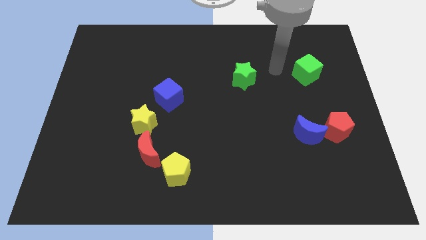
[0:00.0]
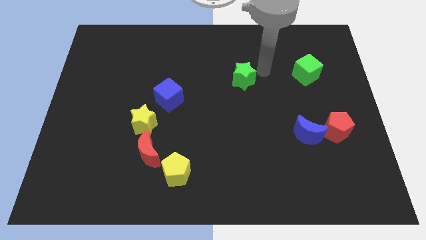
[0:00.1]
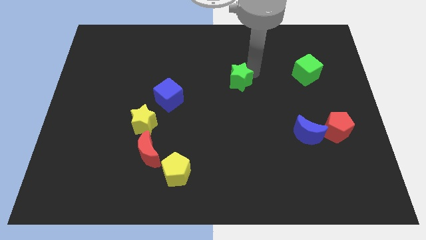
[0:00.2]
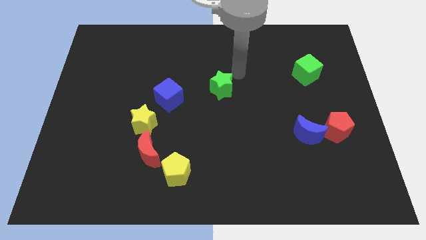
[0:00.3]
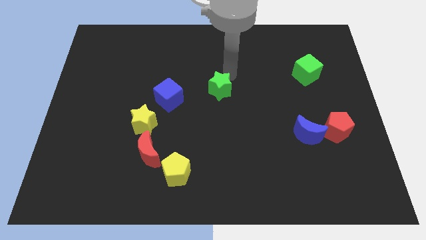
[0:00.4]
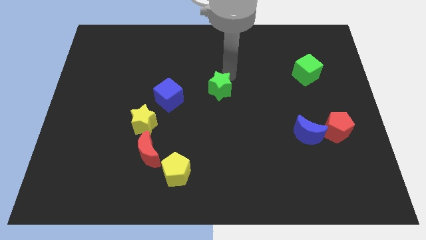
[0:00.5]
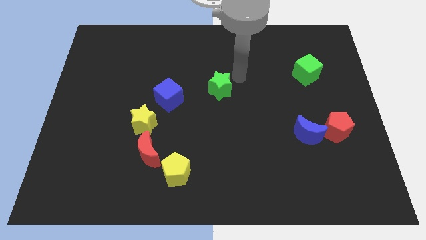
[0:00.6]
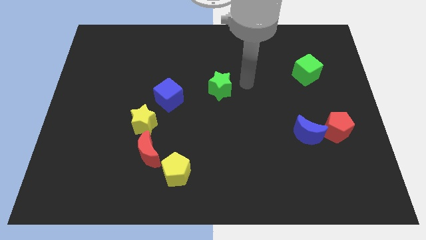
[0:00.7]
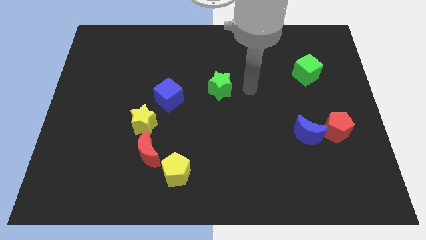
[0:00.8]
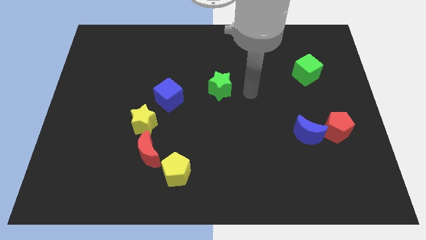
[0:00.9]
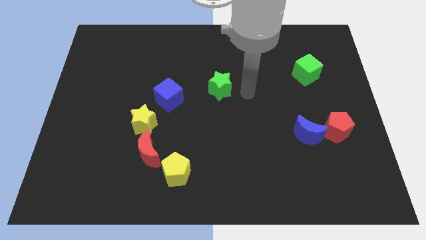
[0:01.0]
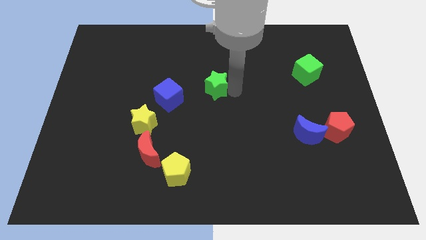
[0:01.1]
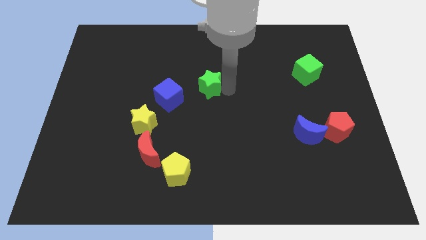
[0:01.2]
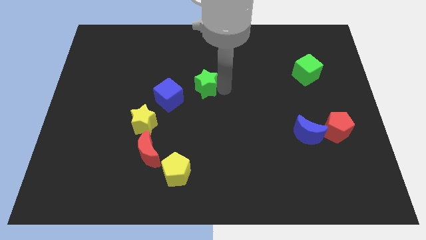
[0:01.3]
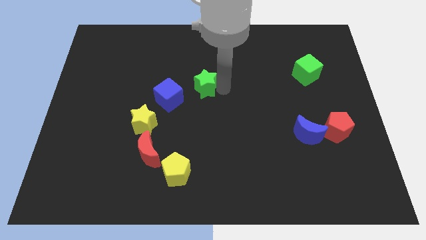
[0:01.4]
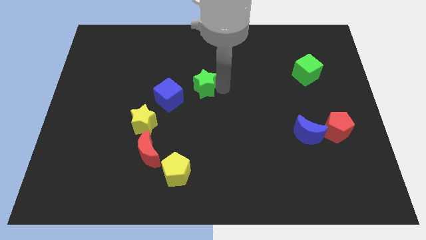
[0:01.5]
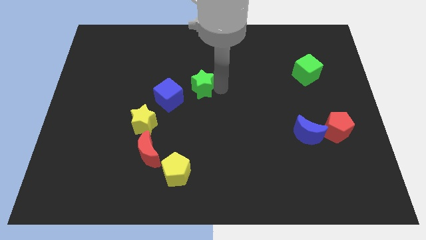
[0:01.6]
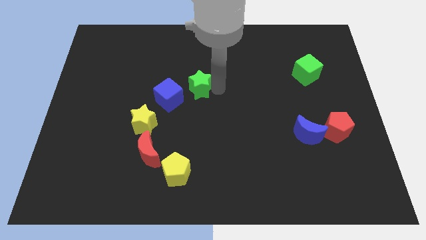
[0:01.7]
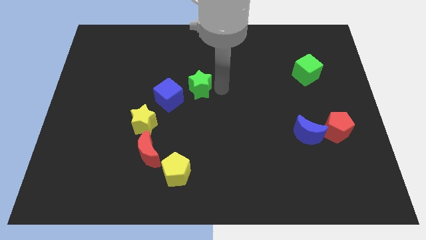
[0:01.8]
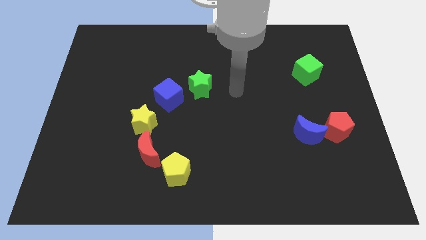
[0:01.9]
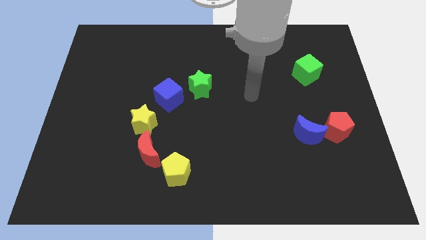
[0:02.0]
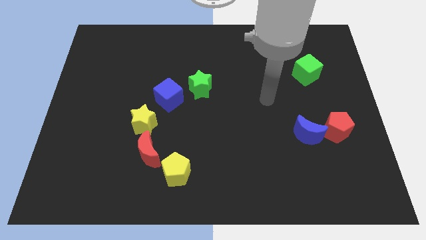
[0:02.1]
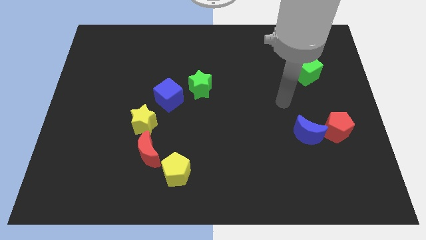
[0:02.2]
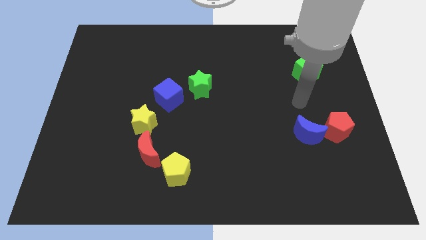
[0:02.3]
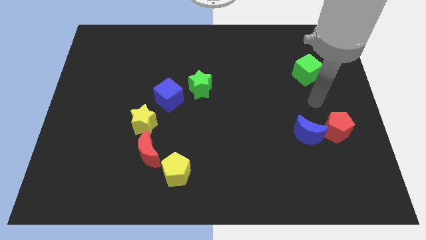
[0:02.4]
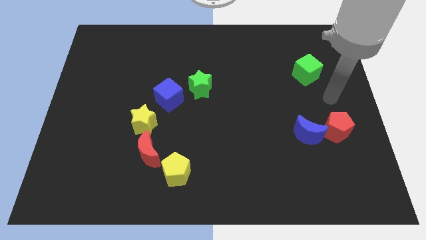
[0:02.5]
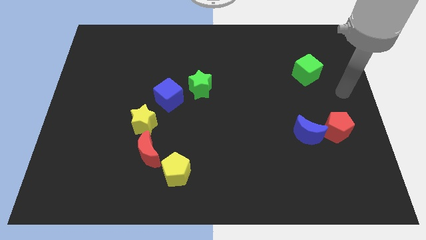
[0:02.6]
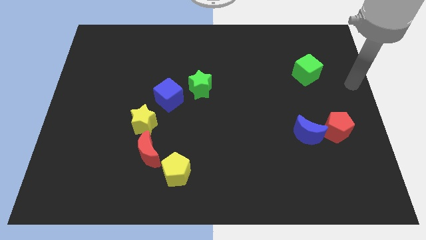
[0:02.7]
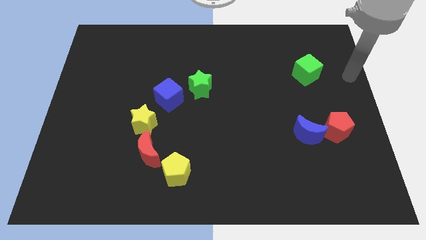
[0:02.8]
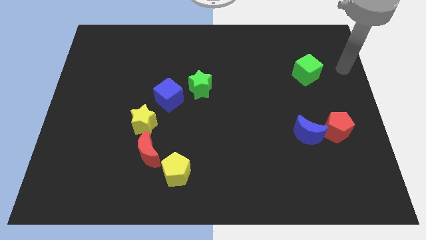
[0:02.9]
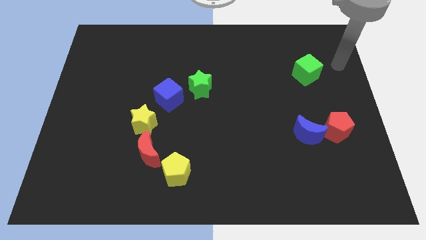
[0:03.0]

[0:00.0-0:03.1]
place the green star right to the blue cube

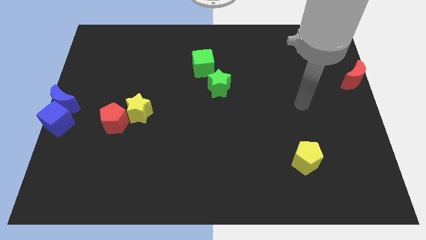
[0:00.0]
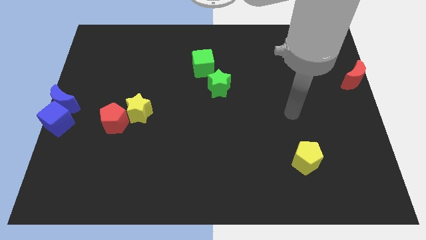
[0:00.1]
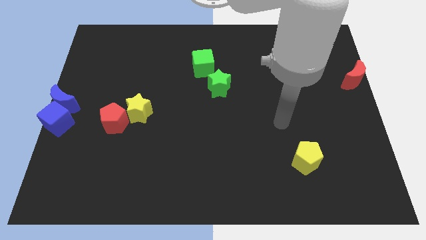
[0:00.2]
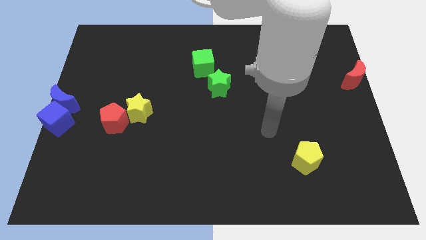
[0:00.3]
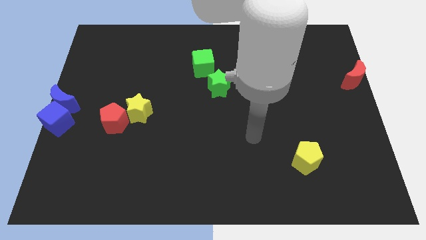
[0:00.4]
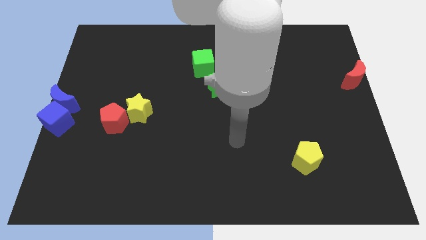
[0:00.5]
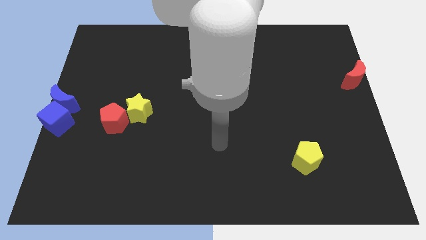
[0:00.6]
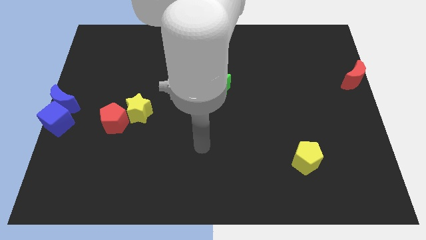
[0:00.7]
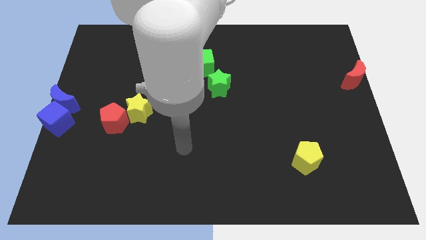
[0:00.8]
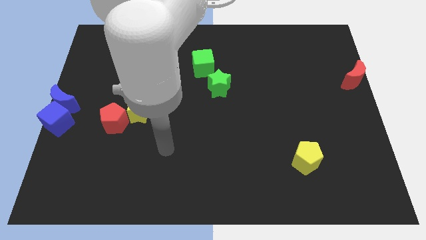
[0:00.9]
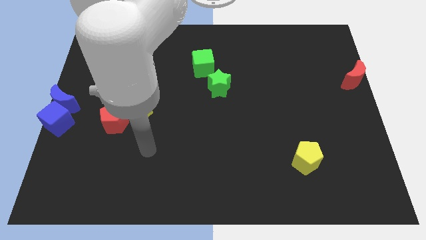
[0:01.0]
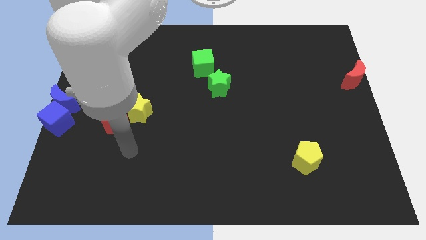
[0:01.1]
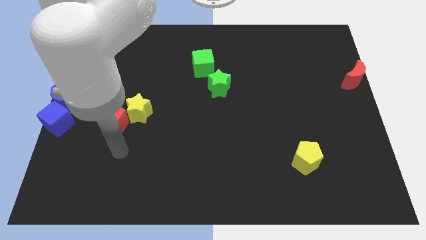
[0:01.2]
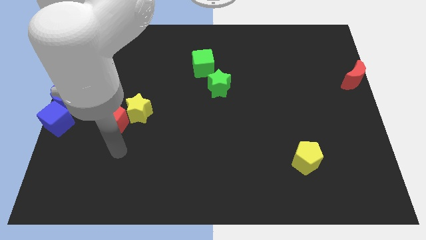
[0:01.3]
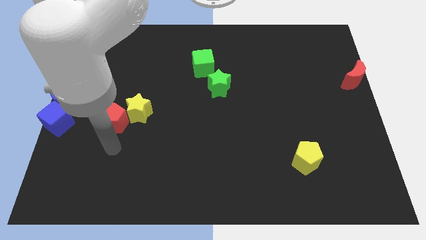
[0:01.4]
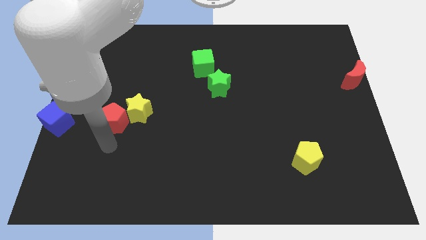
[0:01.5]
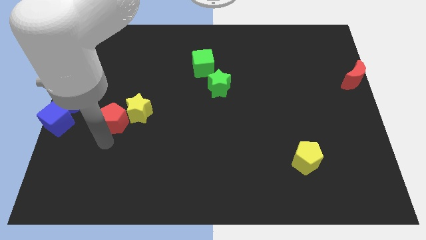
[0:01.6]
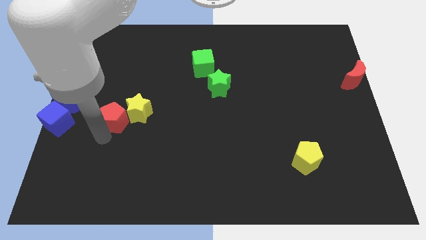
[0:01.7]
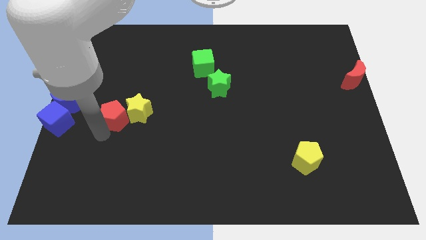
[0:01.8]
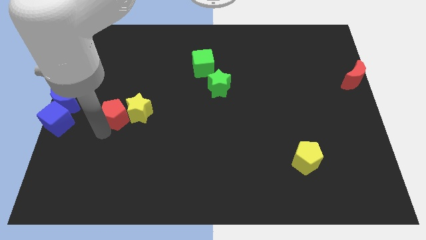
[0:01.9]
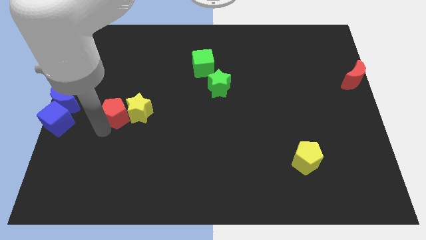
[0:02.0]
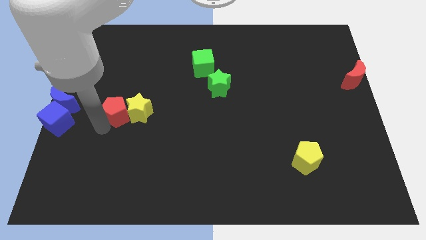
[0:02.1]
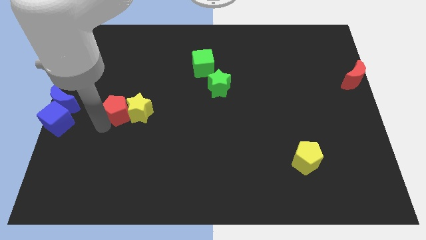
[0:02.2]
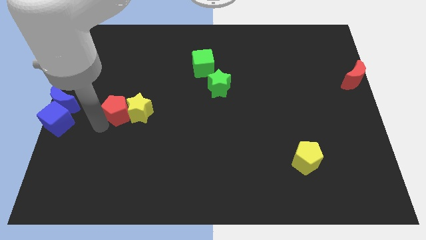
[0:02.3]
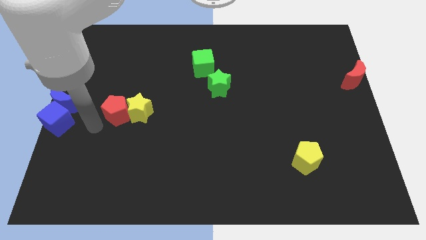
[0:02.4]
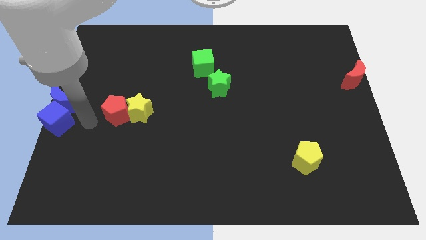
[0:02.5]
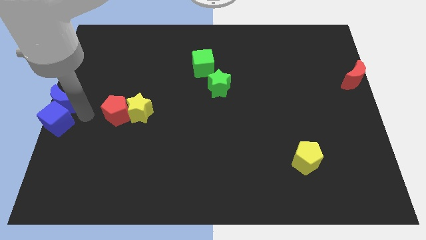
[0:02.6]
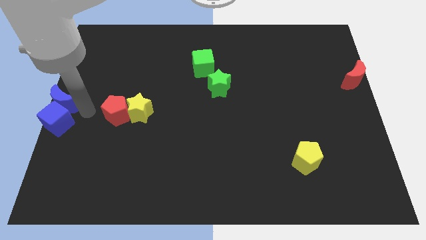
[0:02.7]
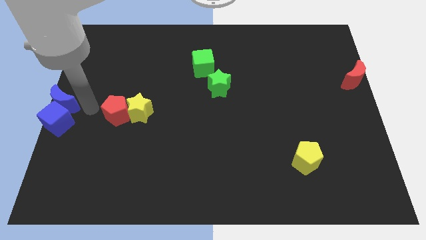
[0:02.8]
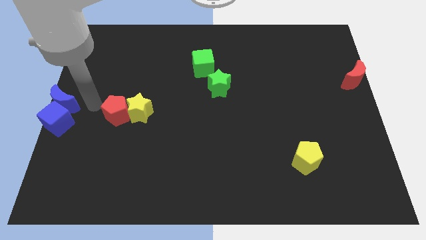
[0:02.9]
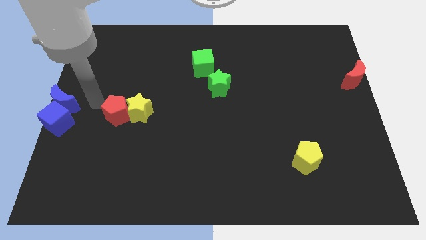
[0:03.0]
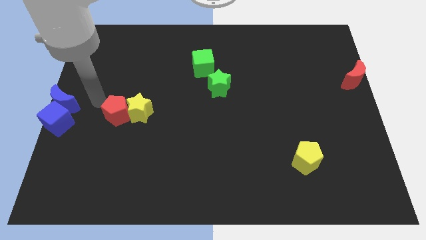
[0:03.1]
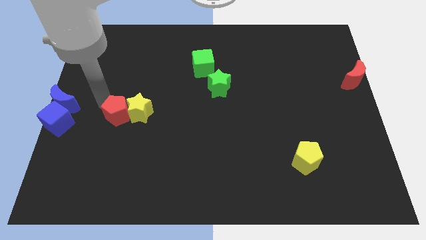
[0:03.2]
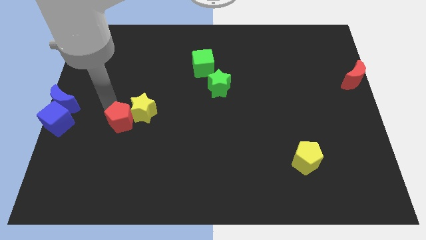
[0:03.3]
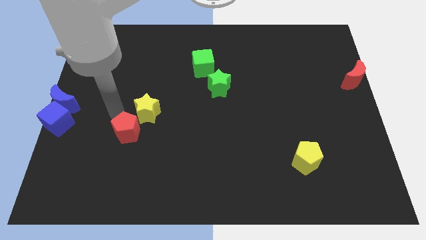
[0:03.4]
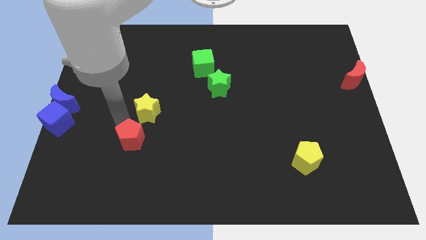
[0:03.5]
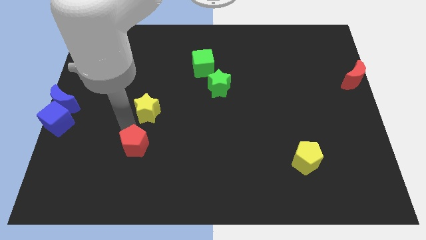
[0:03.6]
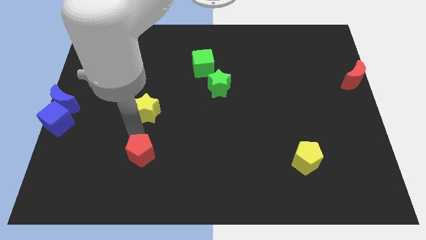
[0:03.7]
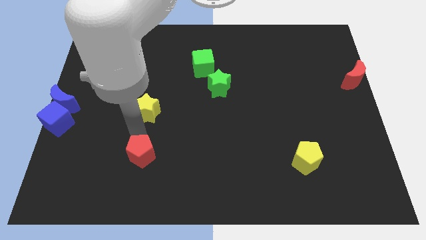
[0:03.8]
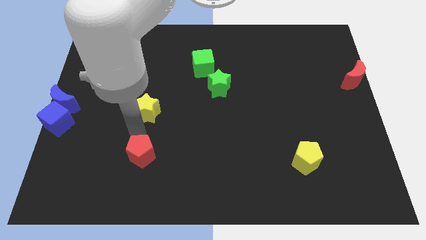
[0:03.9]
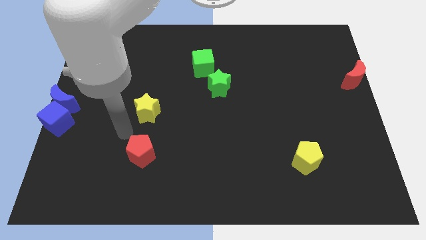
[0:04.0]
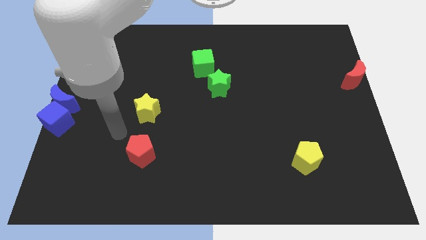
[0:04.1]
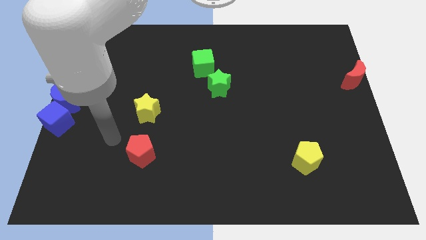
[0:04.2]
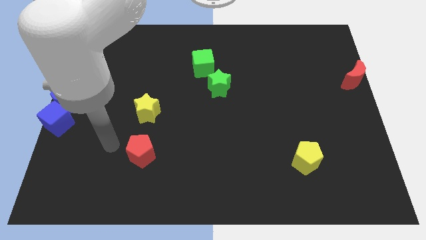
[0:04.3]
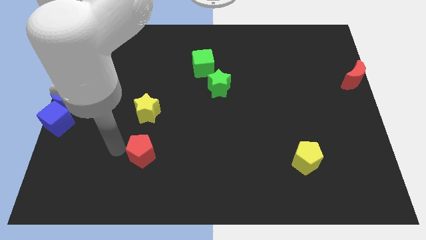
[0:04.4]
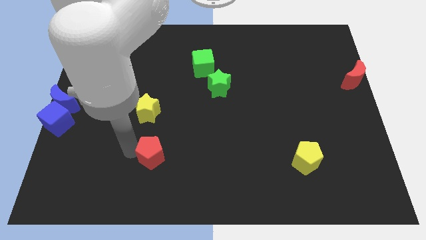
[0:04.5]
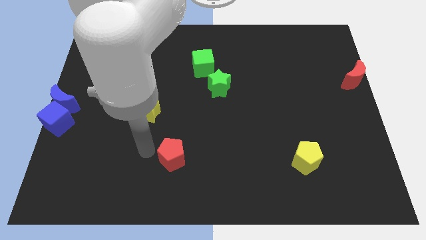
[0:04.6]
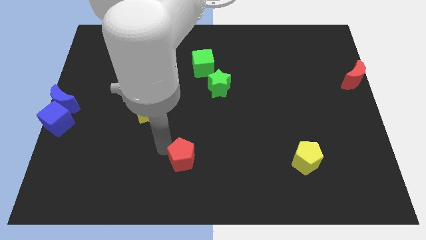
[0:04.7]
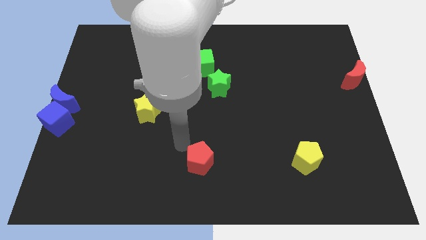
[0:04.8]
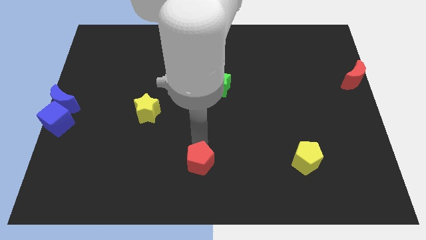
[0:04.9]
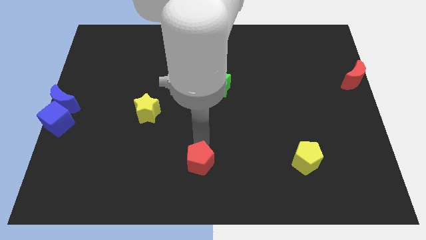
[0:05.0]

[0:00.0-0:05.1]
drag the red pentagon towards the bottom center of the board

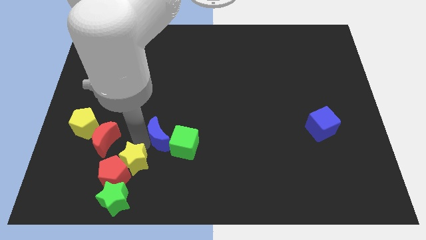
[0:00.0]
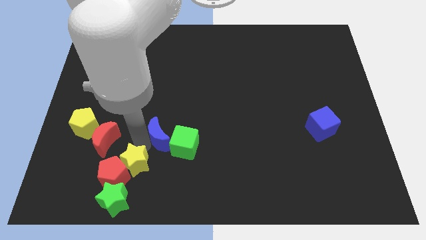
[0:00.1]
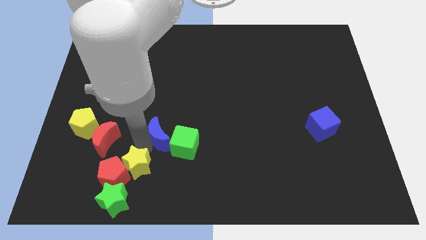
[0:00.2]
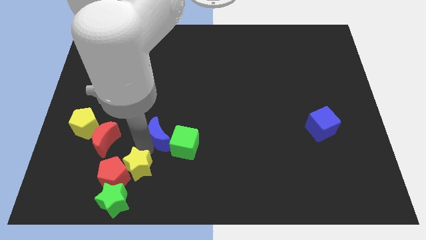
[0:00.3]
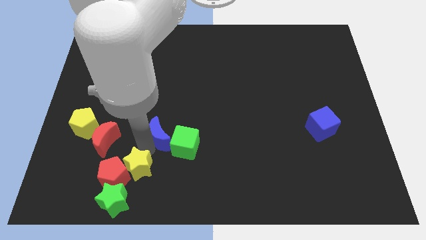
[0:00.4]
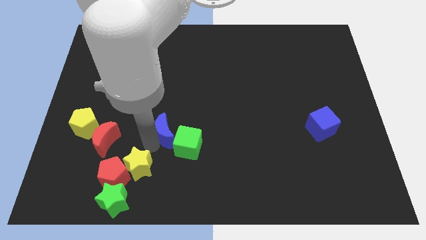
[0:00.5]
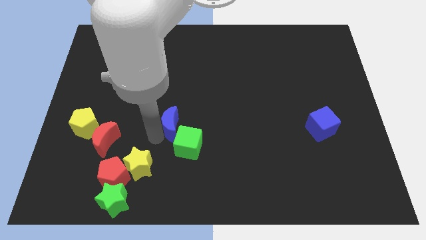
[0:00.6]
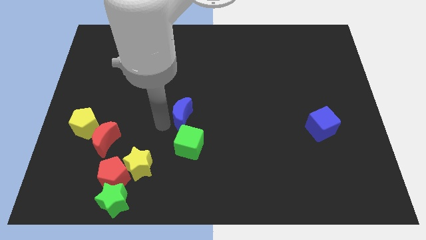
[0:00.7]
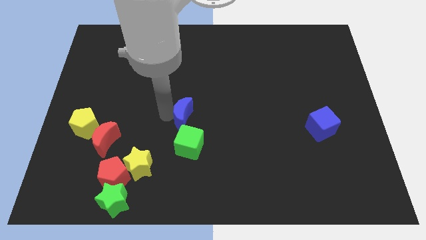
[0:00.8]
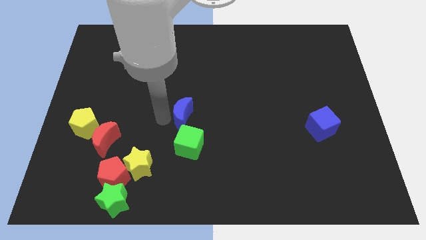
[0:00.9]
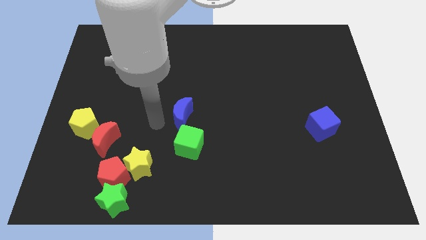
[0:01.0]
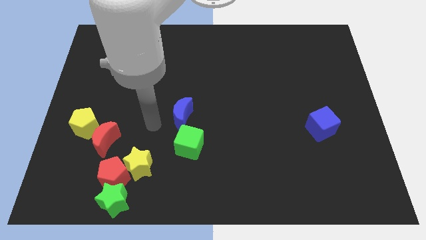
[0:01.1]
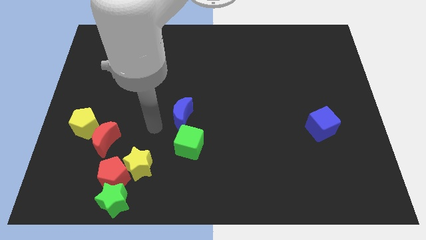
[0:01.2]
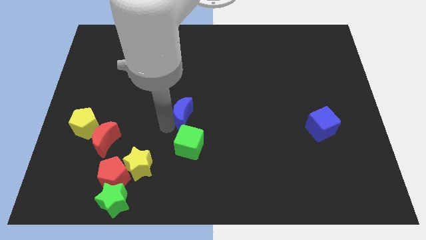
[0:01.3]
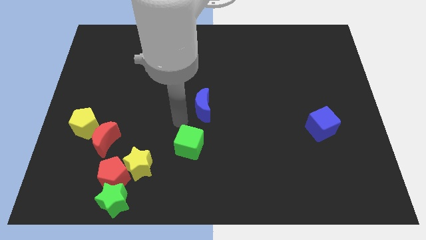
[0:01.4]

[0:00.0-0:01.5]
place the blue moon to the top right of the green cube
